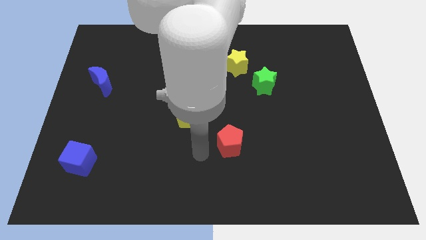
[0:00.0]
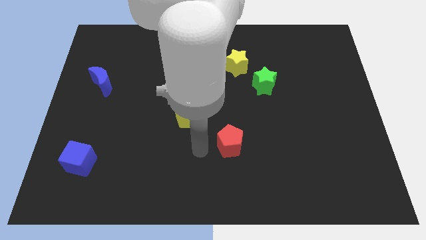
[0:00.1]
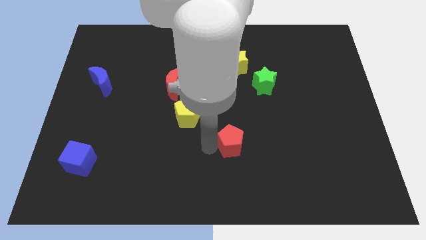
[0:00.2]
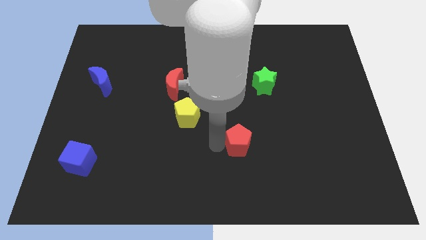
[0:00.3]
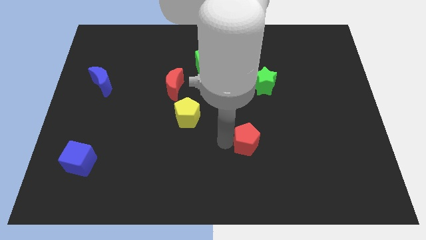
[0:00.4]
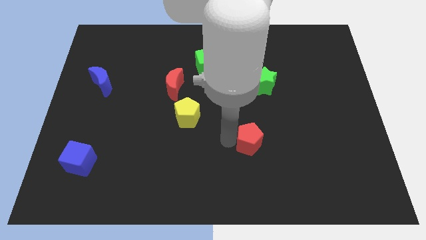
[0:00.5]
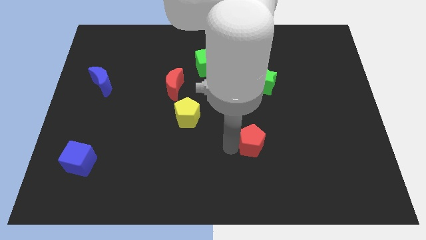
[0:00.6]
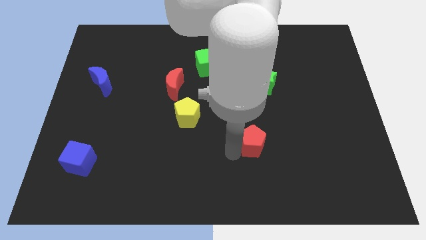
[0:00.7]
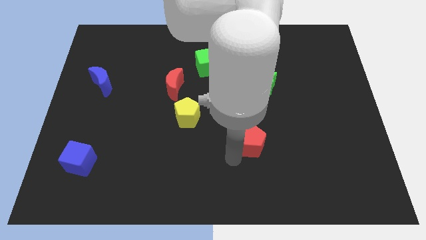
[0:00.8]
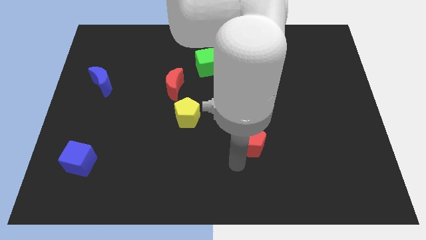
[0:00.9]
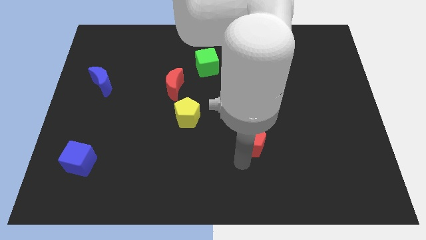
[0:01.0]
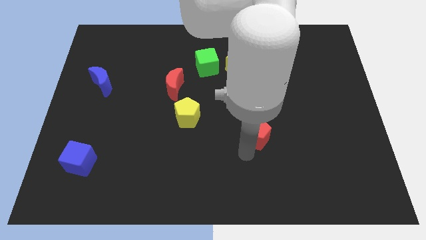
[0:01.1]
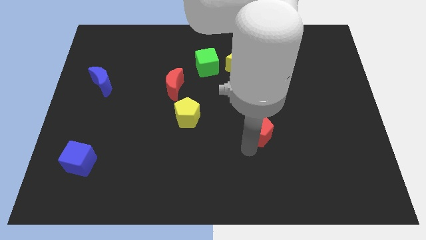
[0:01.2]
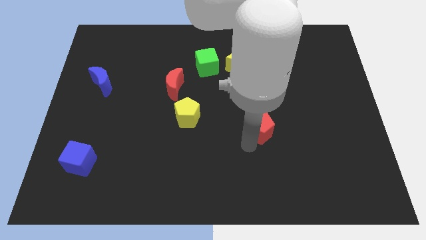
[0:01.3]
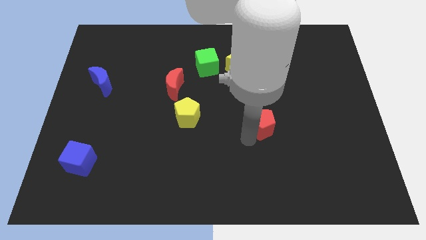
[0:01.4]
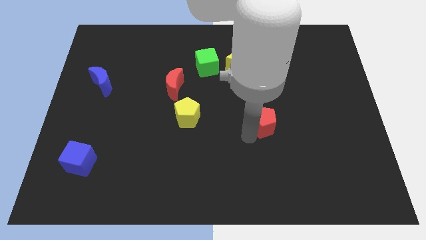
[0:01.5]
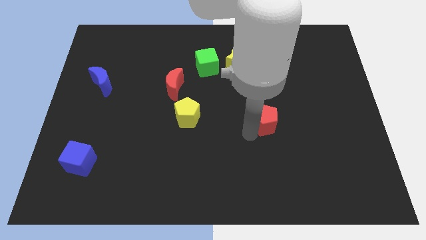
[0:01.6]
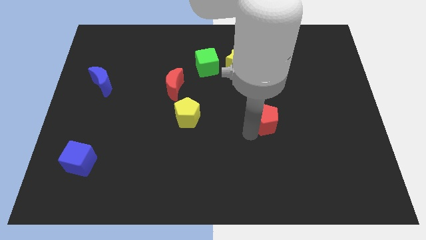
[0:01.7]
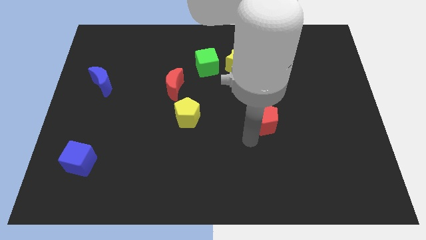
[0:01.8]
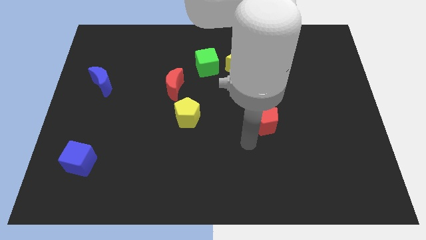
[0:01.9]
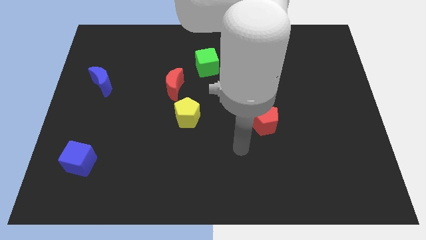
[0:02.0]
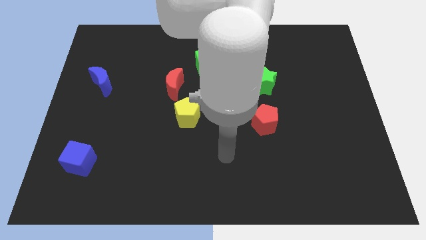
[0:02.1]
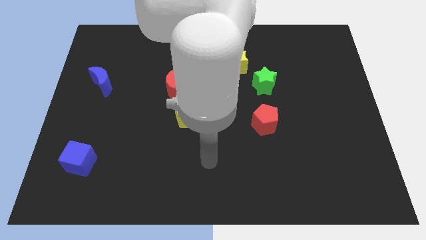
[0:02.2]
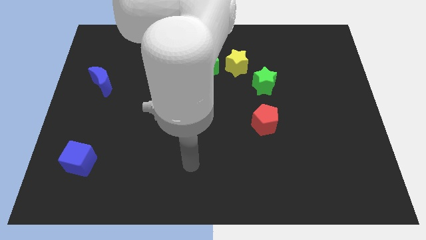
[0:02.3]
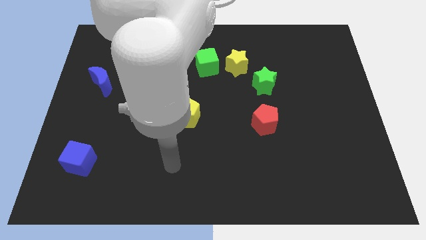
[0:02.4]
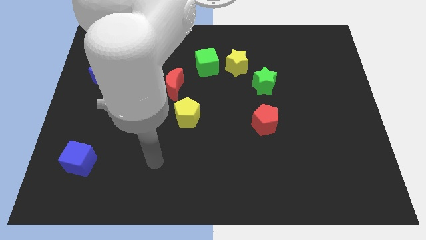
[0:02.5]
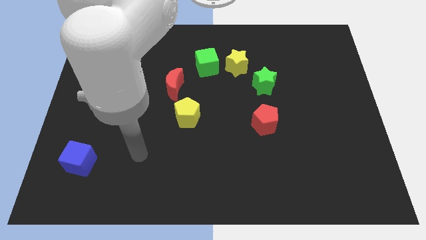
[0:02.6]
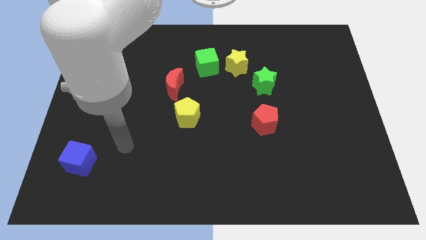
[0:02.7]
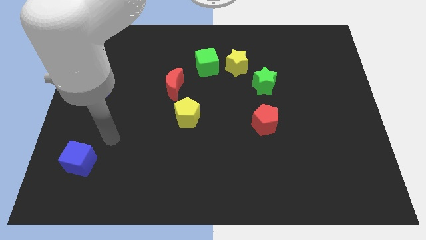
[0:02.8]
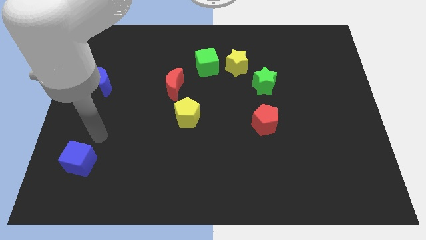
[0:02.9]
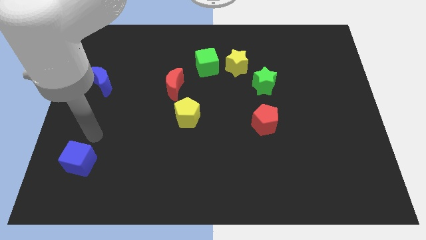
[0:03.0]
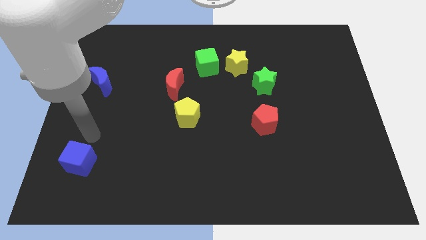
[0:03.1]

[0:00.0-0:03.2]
put the red pentagon vertically below the green star

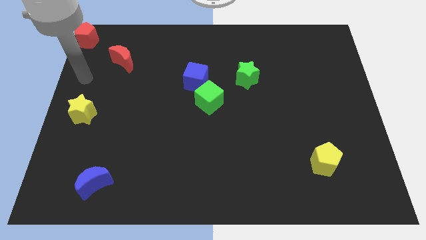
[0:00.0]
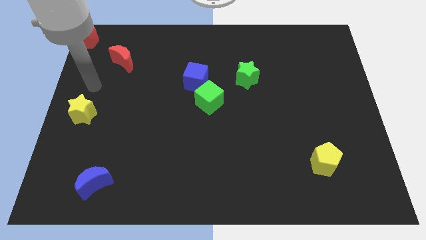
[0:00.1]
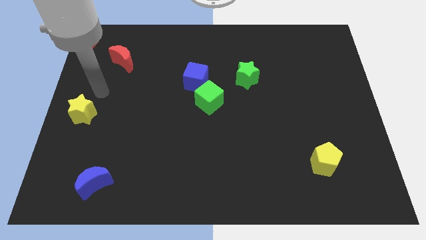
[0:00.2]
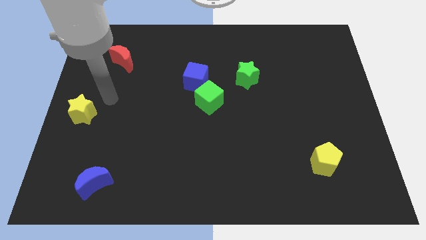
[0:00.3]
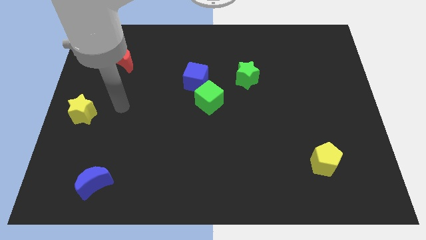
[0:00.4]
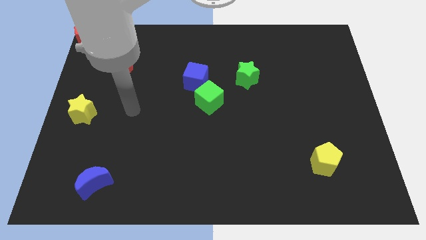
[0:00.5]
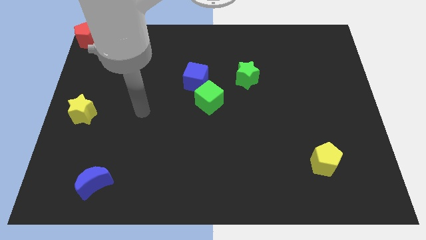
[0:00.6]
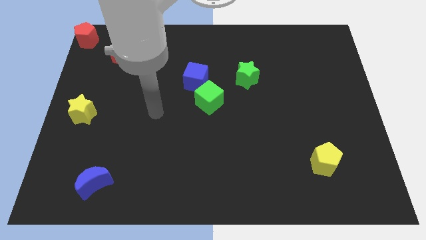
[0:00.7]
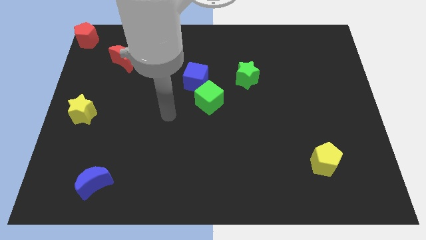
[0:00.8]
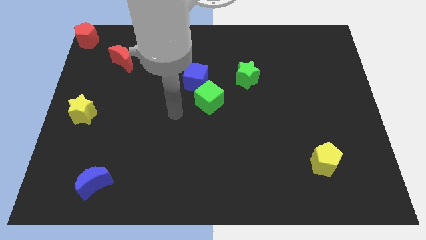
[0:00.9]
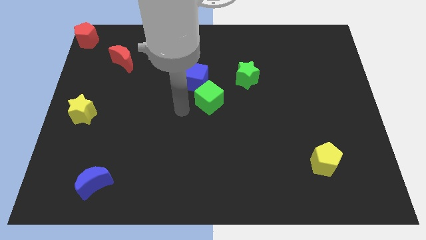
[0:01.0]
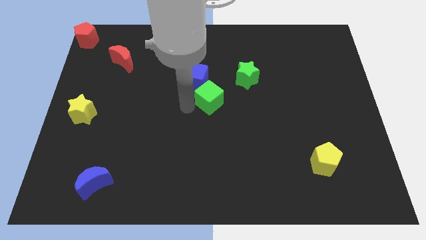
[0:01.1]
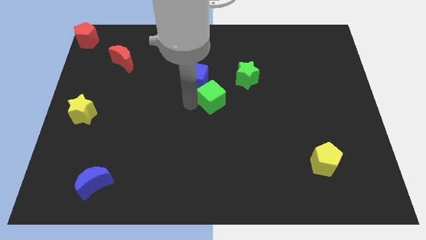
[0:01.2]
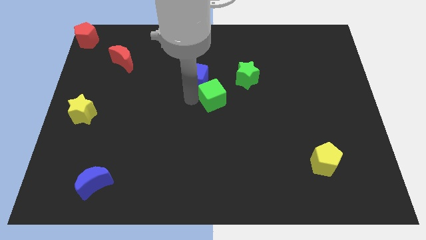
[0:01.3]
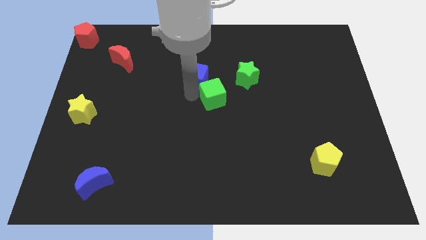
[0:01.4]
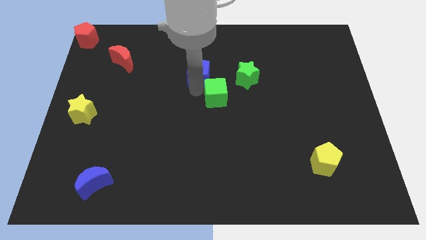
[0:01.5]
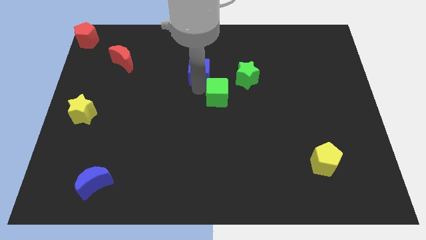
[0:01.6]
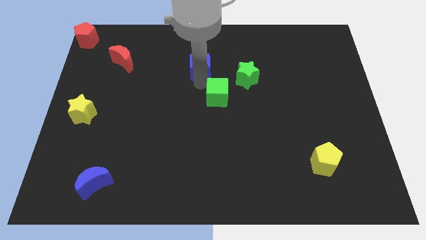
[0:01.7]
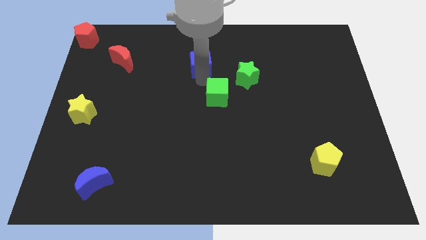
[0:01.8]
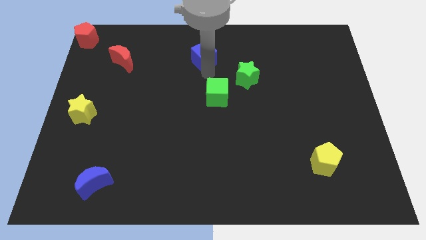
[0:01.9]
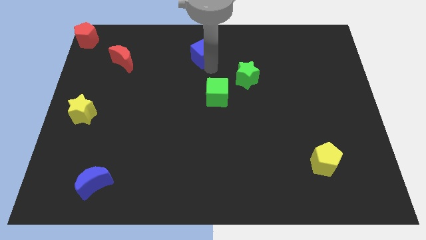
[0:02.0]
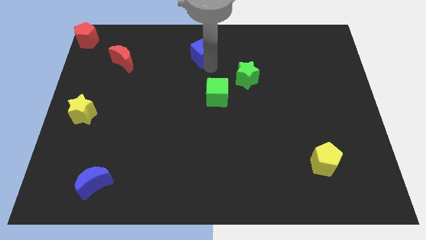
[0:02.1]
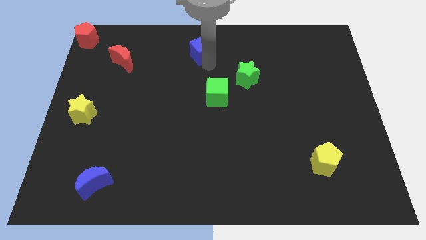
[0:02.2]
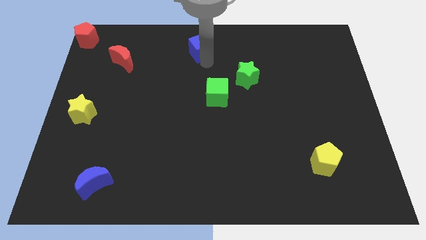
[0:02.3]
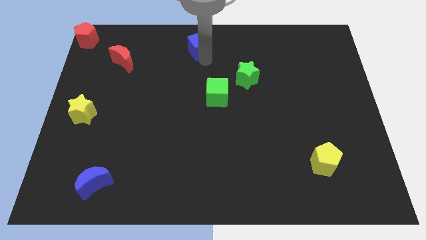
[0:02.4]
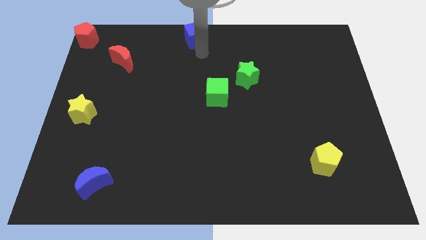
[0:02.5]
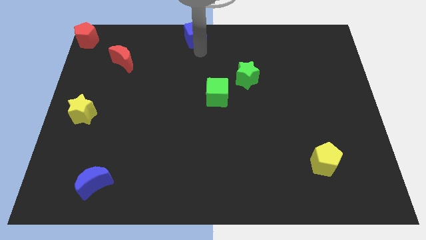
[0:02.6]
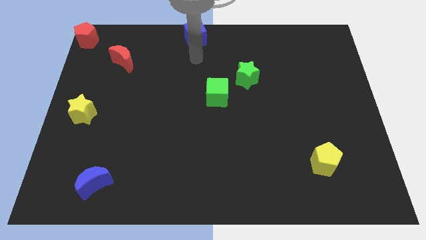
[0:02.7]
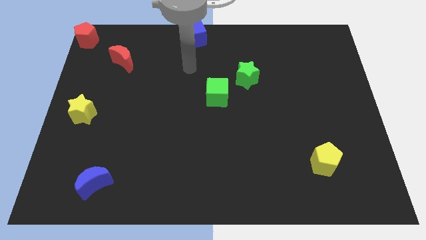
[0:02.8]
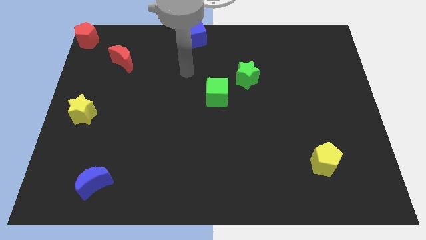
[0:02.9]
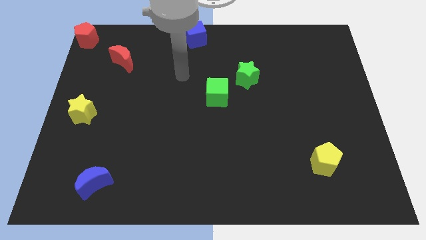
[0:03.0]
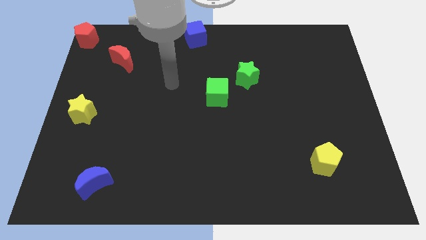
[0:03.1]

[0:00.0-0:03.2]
push the blue cube to the top center of the board

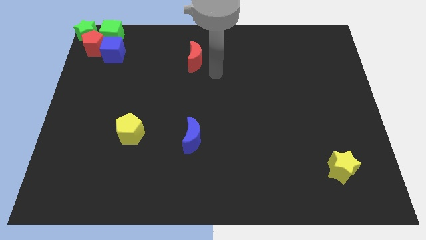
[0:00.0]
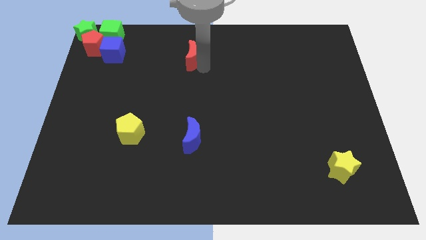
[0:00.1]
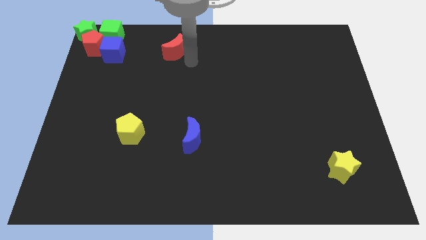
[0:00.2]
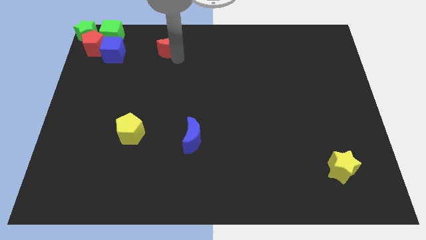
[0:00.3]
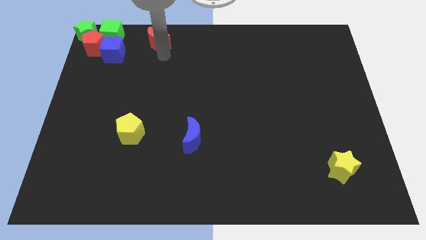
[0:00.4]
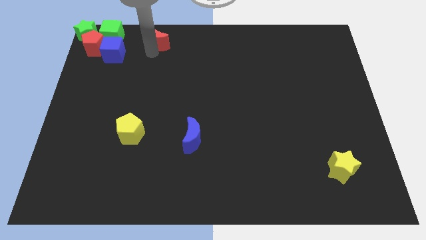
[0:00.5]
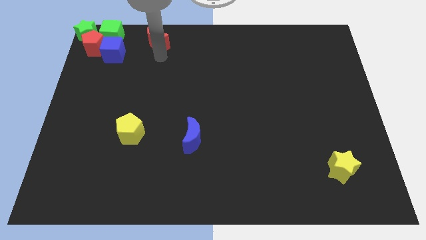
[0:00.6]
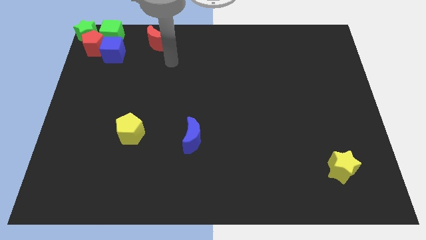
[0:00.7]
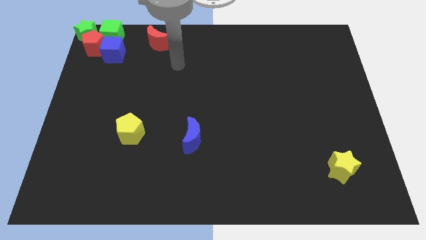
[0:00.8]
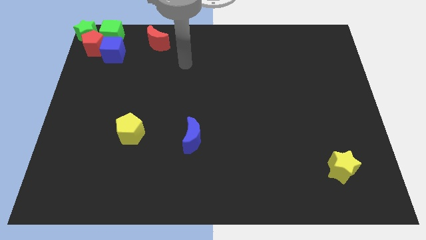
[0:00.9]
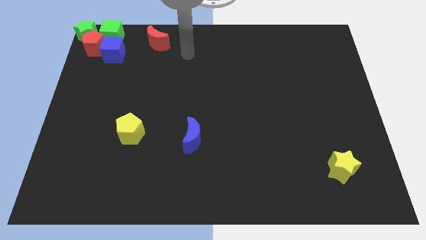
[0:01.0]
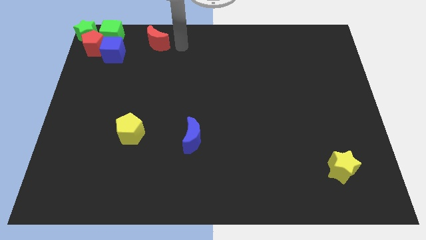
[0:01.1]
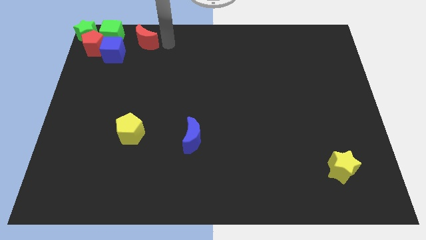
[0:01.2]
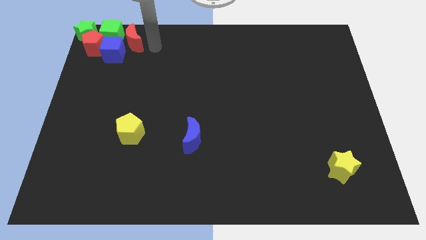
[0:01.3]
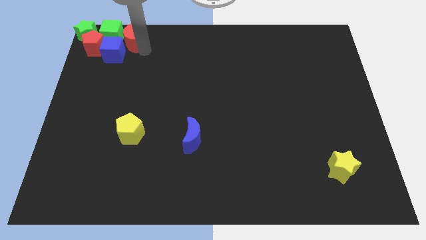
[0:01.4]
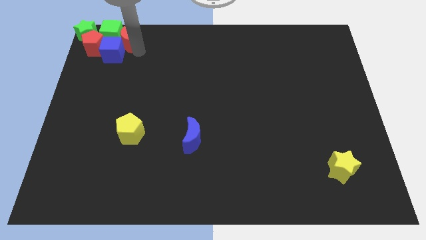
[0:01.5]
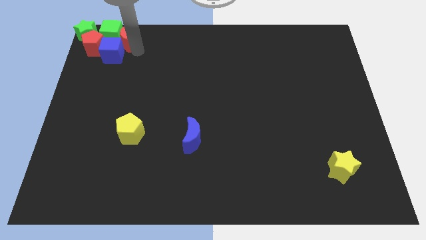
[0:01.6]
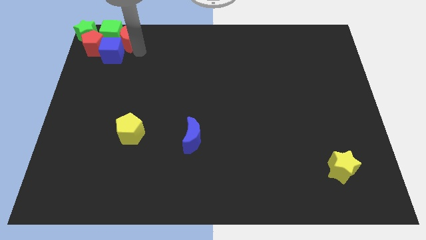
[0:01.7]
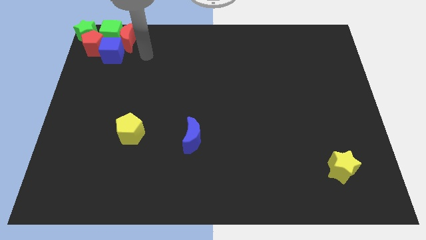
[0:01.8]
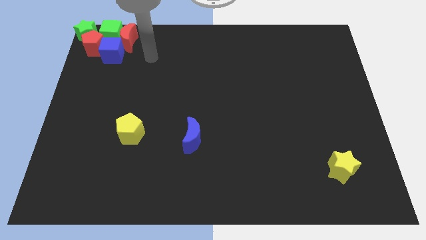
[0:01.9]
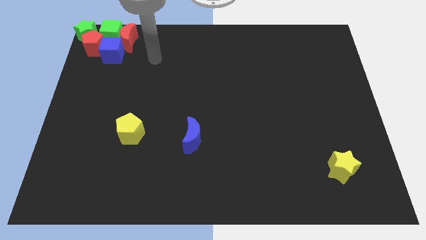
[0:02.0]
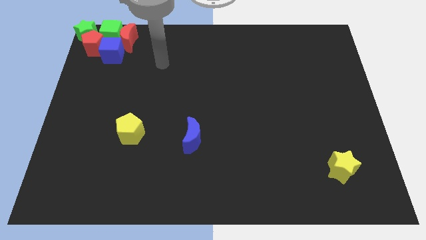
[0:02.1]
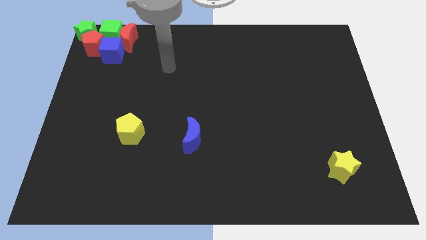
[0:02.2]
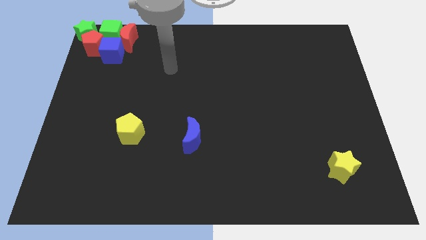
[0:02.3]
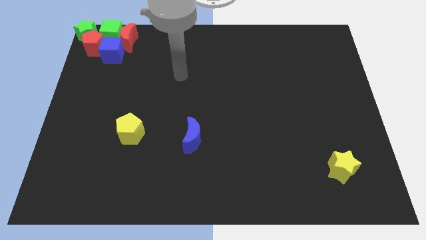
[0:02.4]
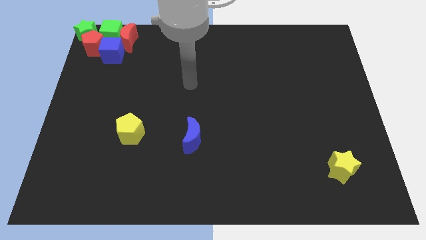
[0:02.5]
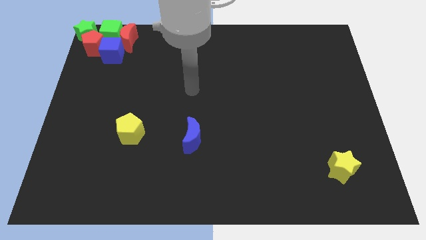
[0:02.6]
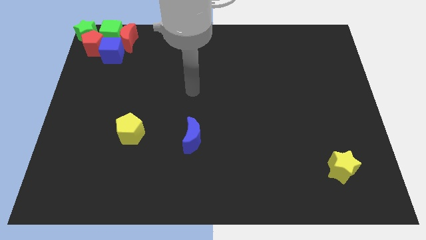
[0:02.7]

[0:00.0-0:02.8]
move the red moon right to the green cube
